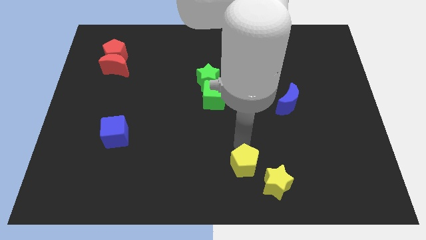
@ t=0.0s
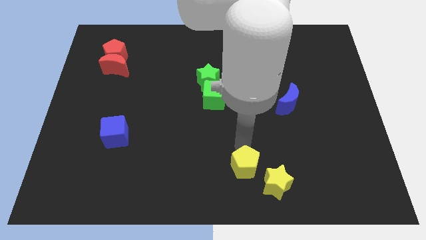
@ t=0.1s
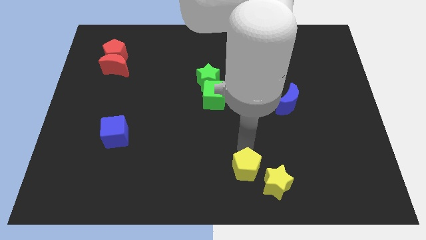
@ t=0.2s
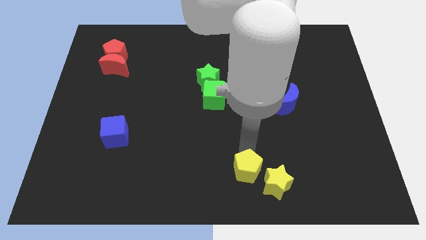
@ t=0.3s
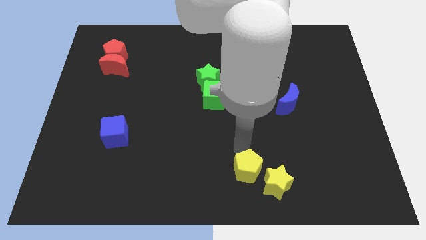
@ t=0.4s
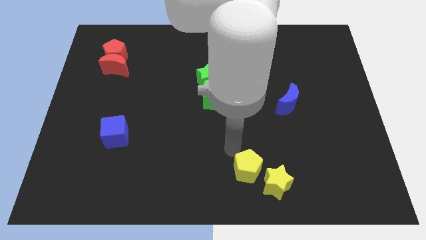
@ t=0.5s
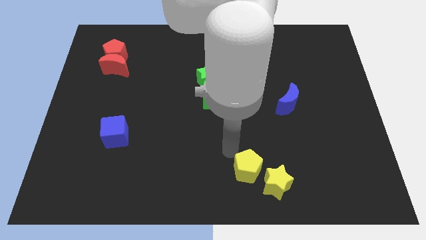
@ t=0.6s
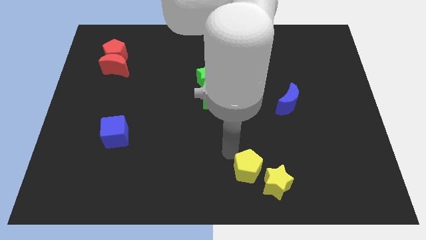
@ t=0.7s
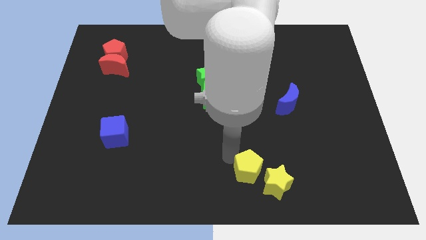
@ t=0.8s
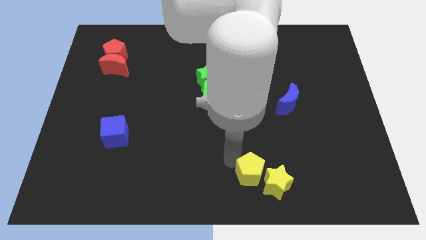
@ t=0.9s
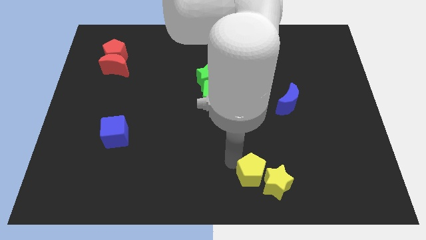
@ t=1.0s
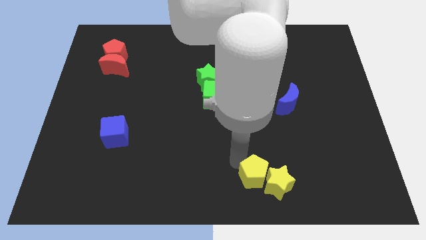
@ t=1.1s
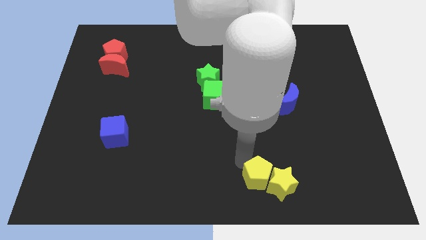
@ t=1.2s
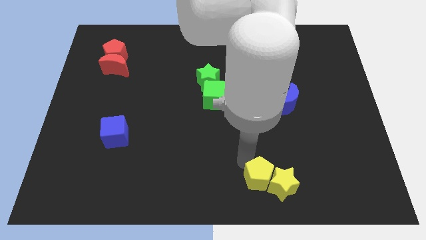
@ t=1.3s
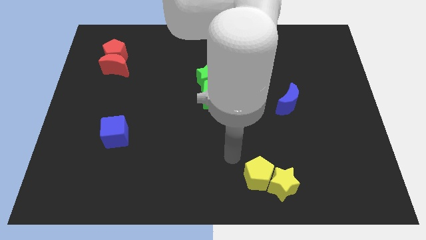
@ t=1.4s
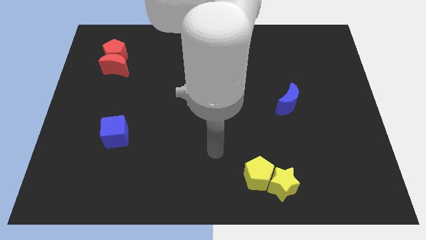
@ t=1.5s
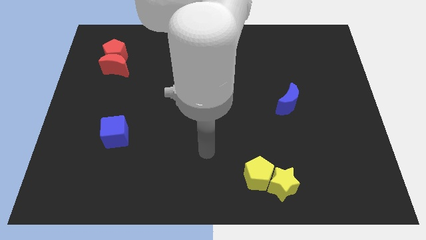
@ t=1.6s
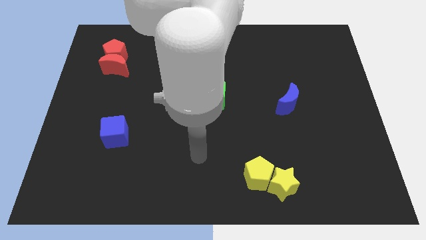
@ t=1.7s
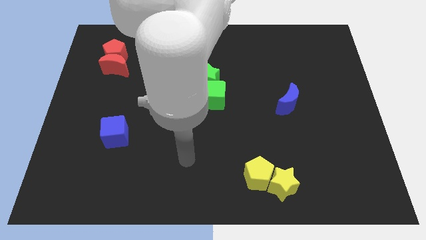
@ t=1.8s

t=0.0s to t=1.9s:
place the yellow pentagon to the left side of the yellow star

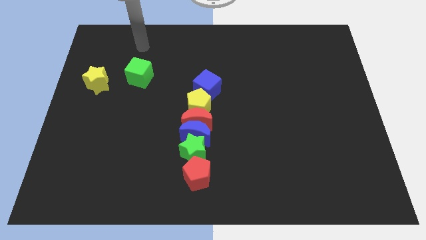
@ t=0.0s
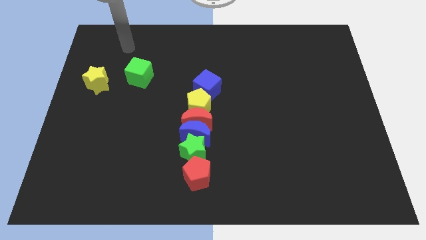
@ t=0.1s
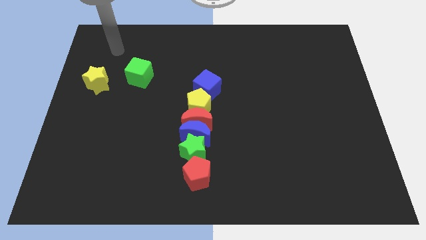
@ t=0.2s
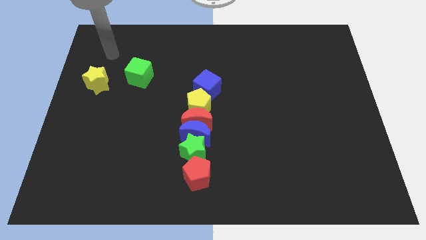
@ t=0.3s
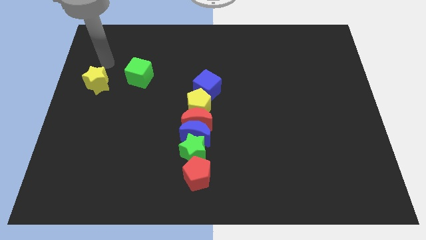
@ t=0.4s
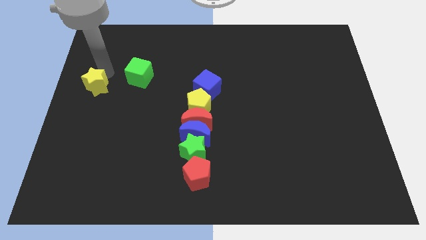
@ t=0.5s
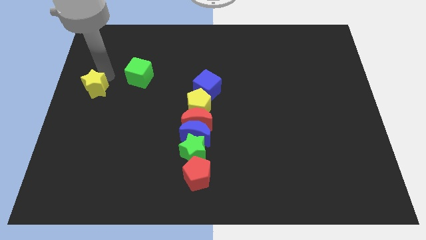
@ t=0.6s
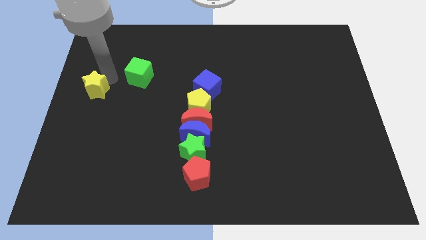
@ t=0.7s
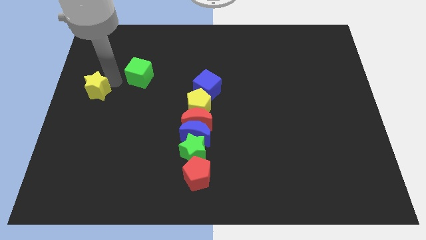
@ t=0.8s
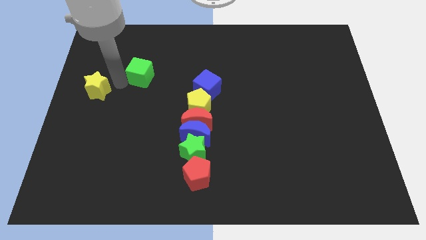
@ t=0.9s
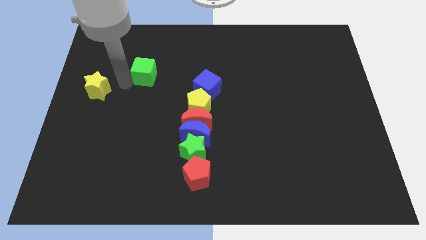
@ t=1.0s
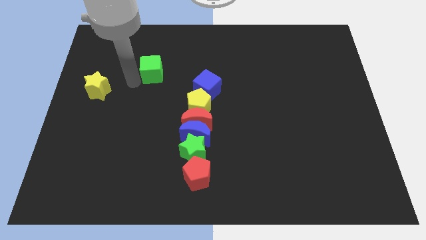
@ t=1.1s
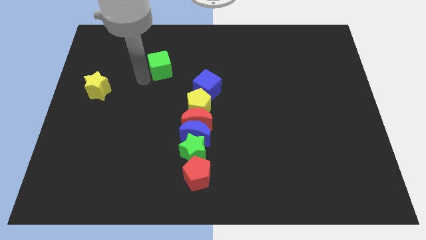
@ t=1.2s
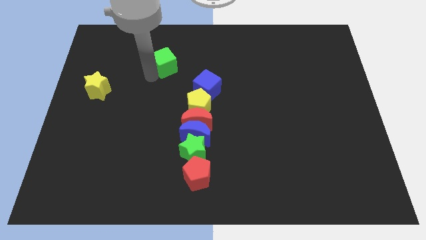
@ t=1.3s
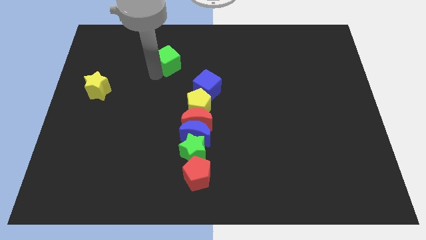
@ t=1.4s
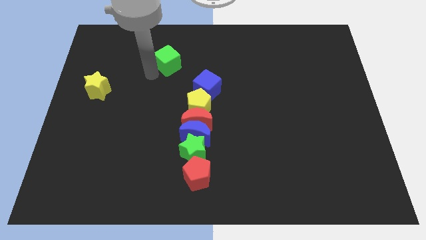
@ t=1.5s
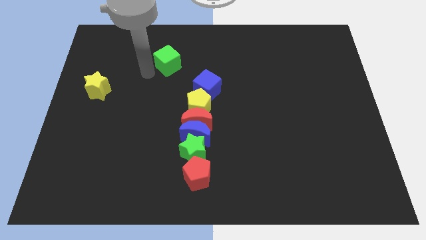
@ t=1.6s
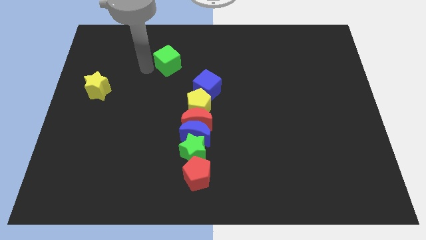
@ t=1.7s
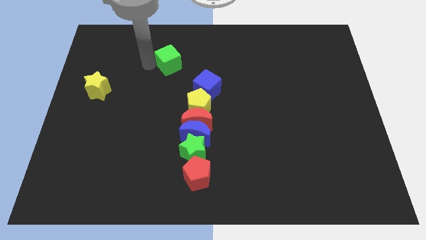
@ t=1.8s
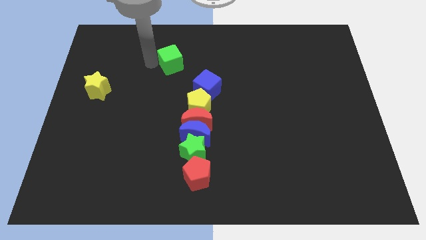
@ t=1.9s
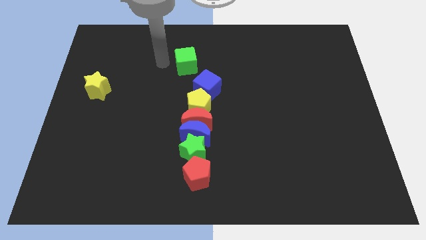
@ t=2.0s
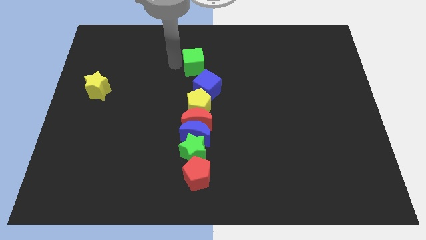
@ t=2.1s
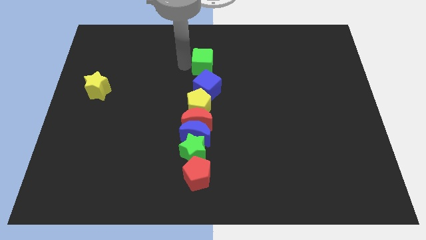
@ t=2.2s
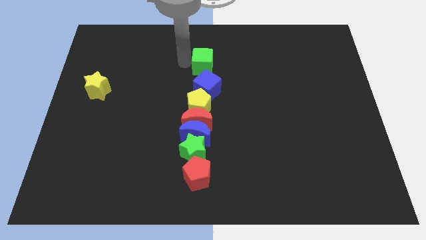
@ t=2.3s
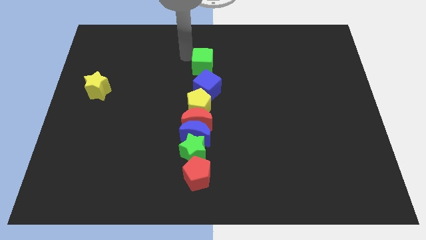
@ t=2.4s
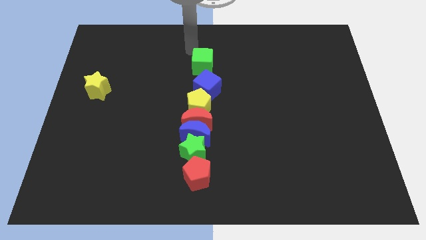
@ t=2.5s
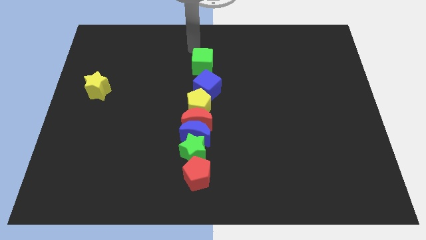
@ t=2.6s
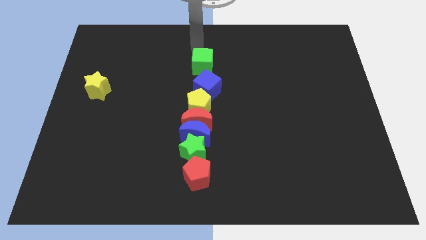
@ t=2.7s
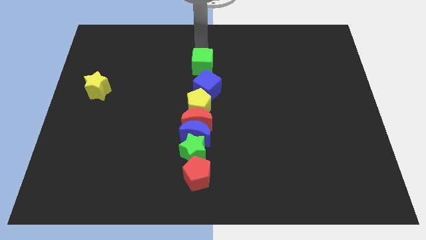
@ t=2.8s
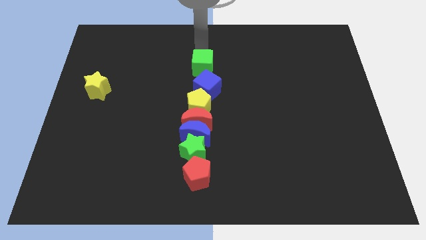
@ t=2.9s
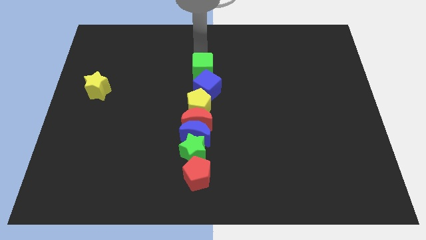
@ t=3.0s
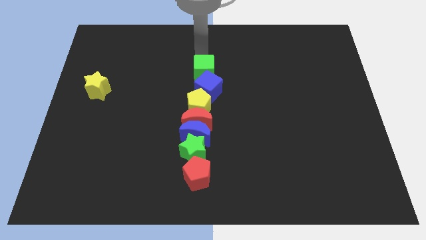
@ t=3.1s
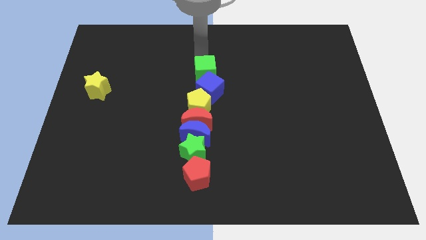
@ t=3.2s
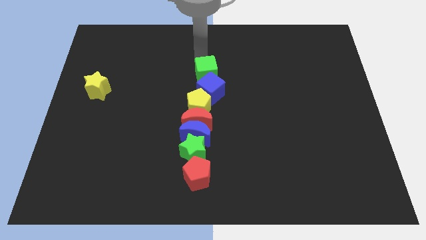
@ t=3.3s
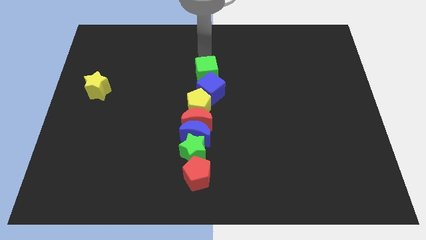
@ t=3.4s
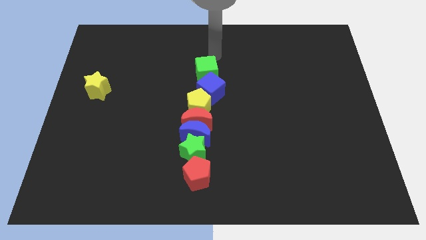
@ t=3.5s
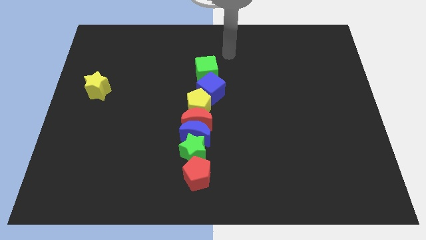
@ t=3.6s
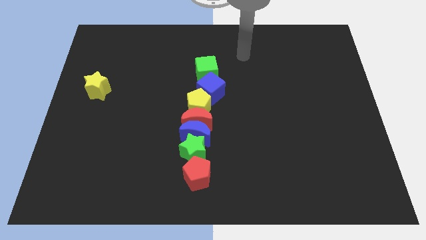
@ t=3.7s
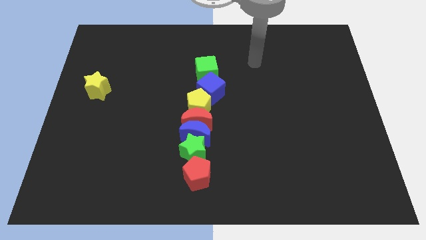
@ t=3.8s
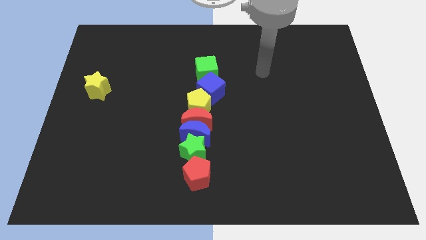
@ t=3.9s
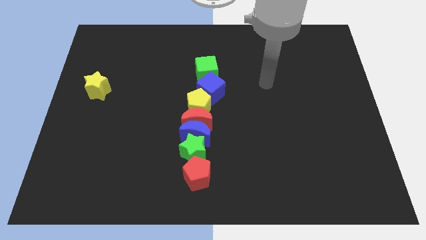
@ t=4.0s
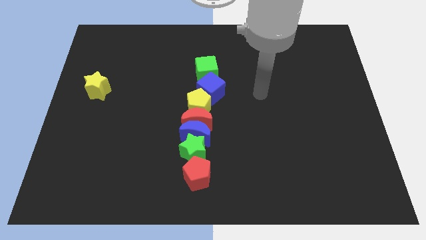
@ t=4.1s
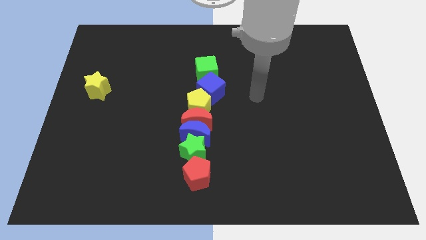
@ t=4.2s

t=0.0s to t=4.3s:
push the green cube into the blue cube

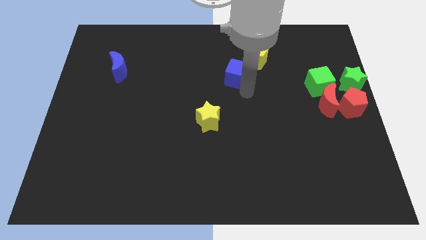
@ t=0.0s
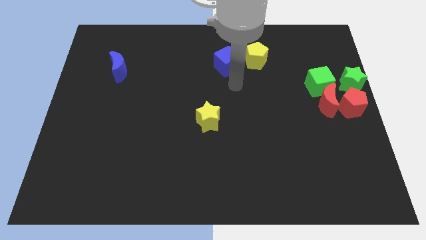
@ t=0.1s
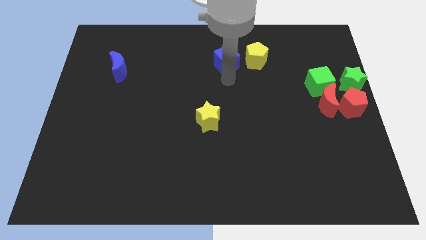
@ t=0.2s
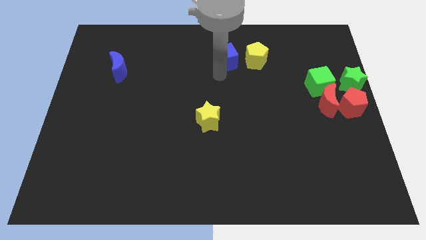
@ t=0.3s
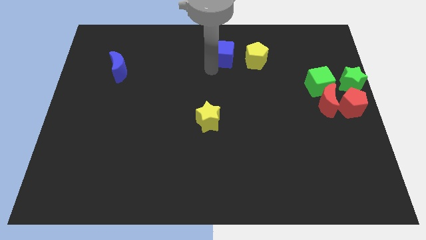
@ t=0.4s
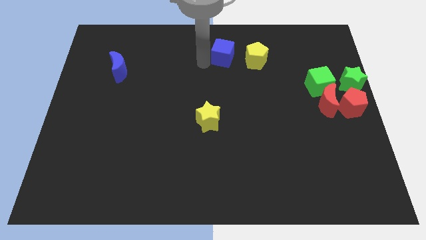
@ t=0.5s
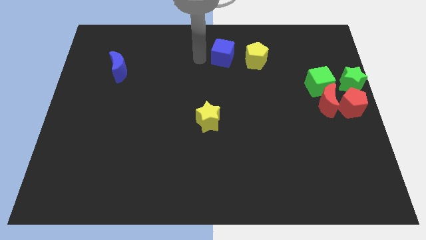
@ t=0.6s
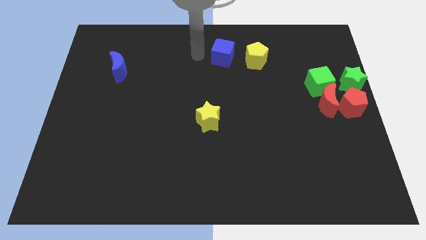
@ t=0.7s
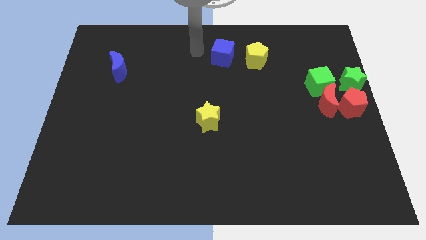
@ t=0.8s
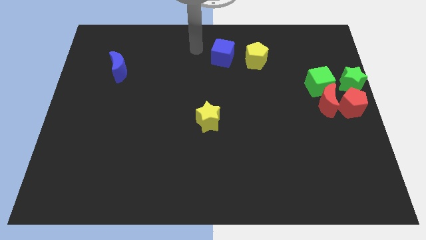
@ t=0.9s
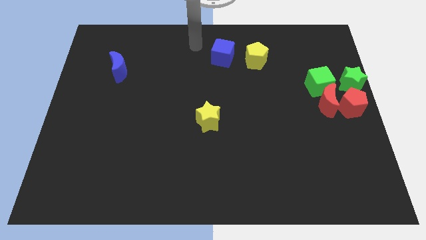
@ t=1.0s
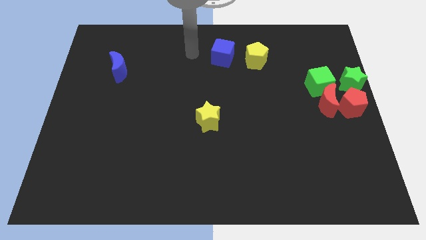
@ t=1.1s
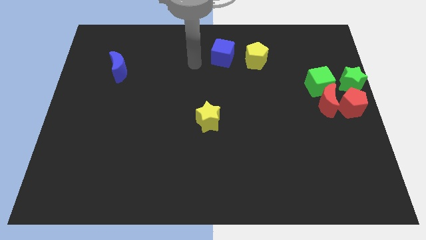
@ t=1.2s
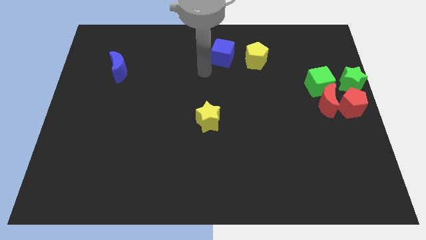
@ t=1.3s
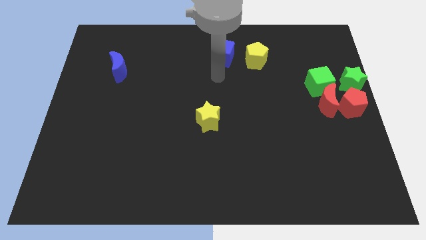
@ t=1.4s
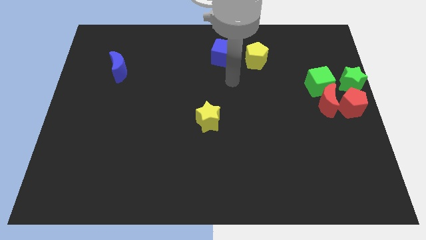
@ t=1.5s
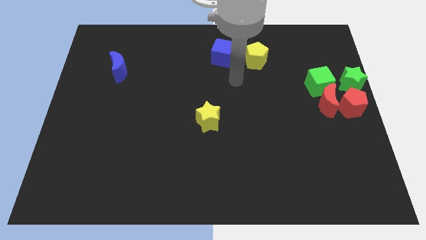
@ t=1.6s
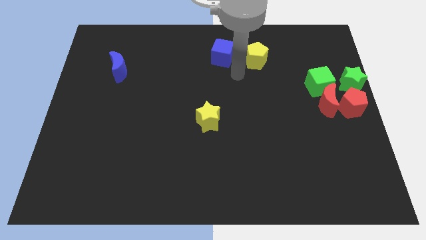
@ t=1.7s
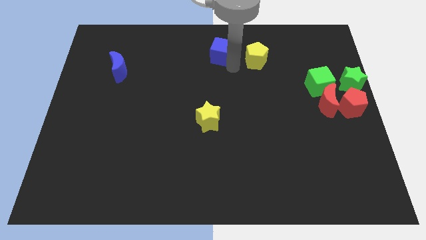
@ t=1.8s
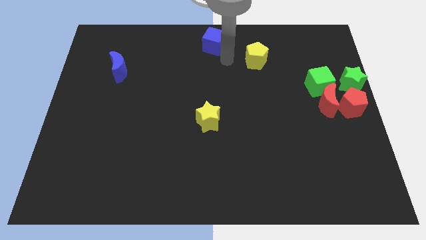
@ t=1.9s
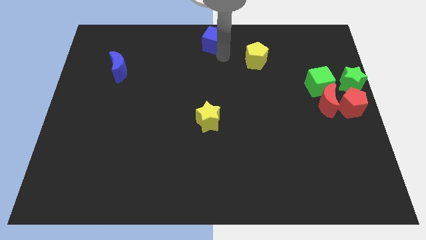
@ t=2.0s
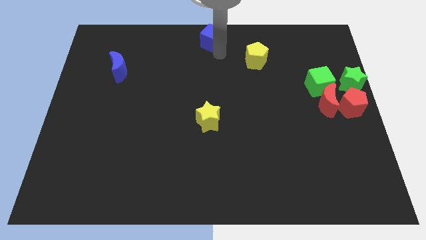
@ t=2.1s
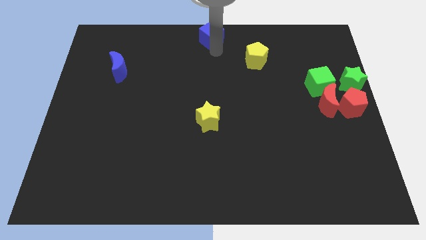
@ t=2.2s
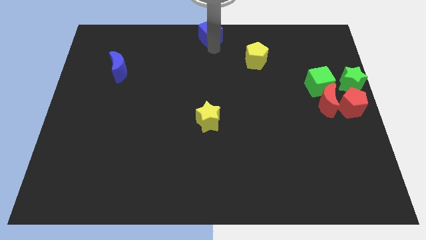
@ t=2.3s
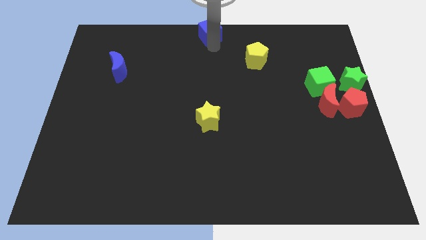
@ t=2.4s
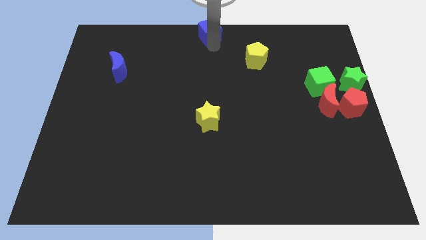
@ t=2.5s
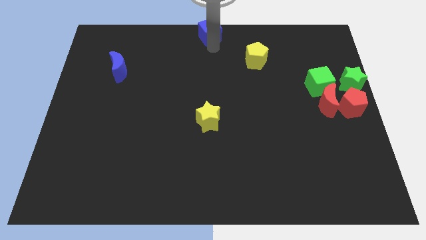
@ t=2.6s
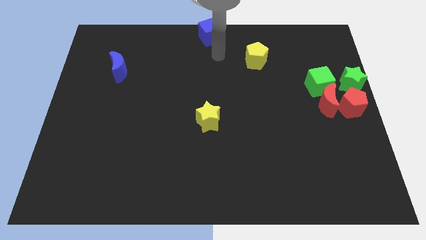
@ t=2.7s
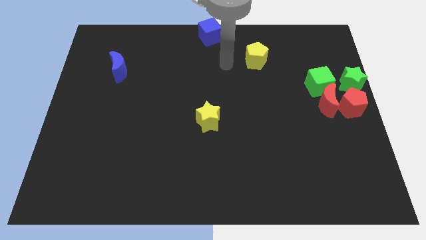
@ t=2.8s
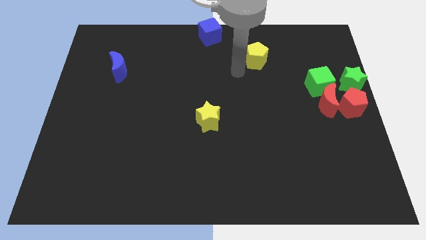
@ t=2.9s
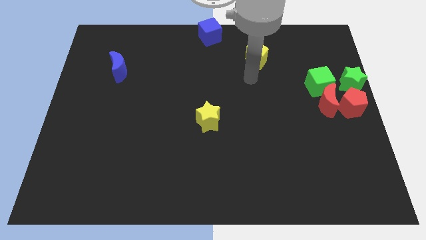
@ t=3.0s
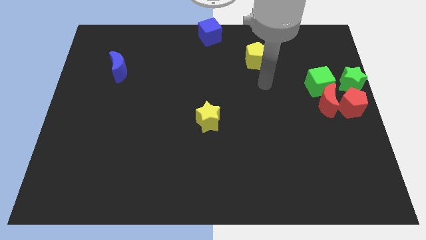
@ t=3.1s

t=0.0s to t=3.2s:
place the blue cube to the top middle of the board
